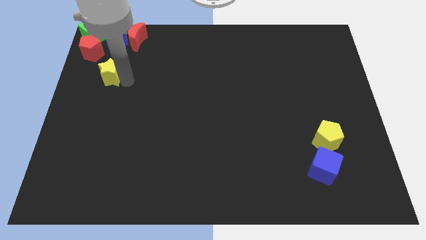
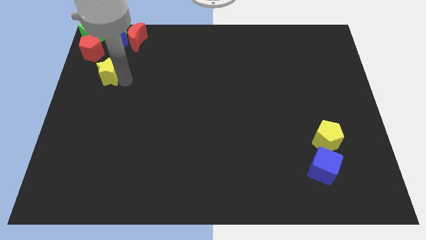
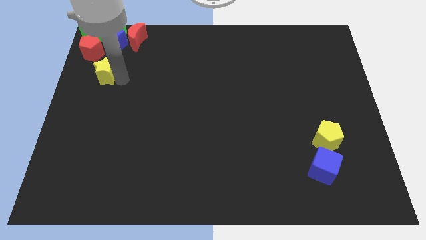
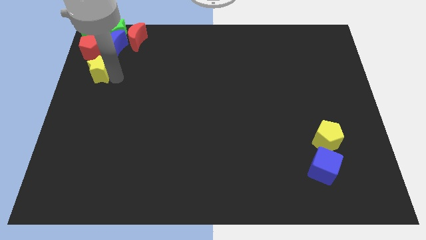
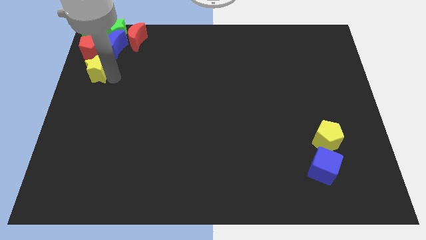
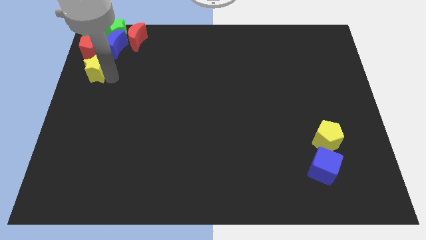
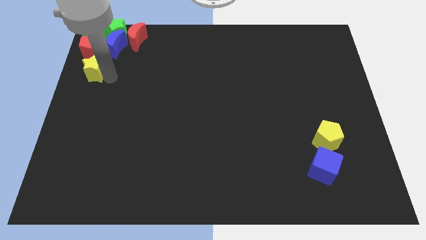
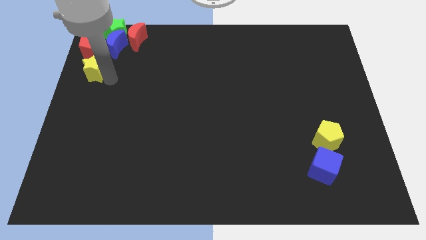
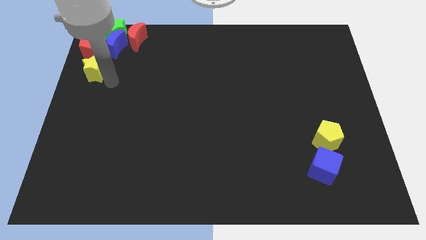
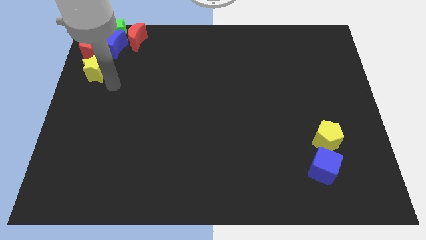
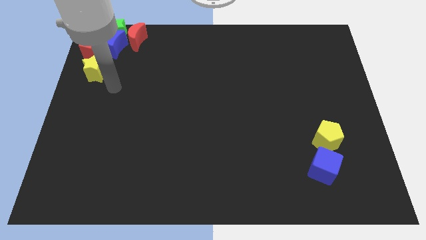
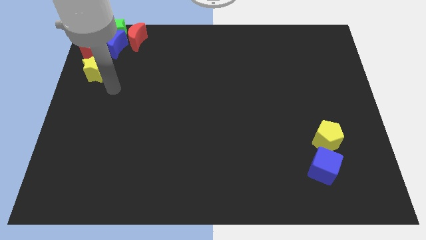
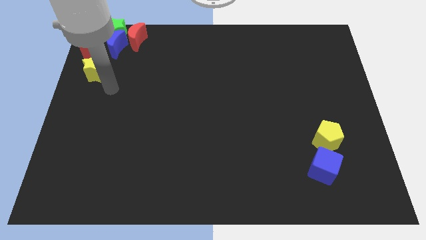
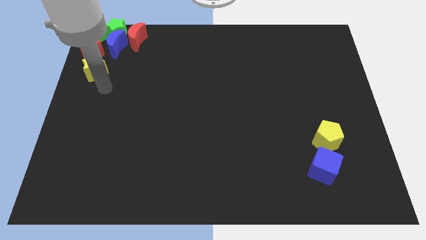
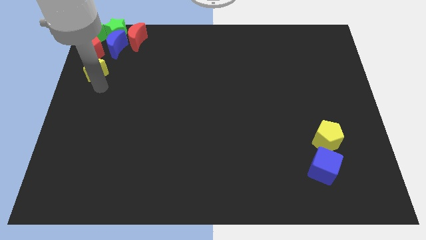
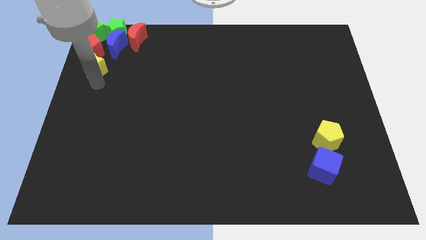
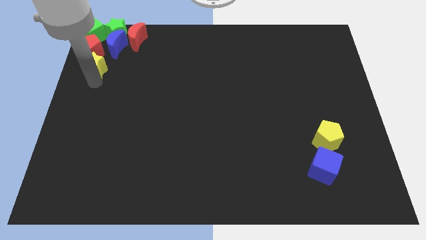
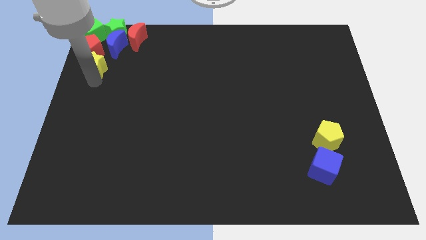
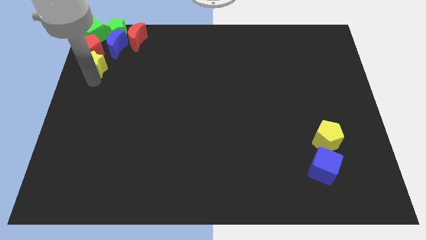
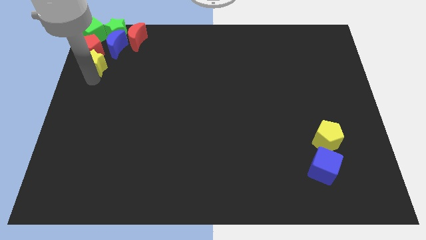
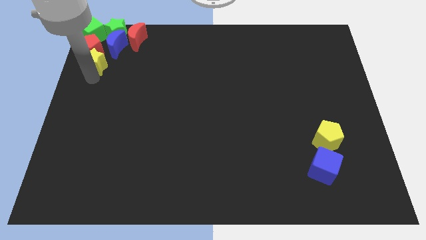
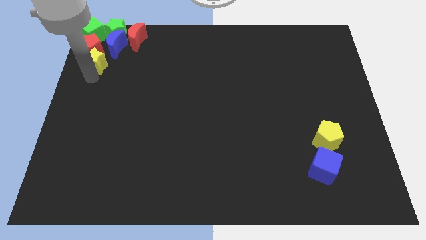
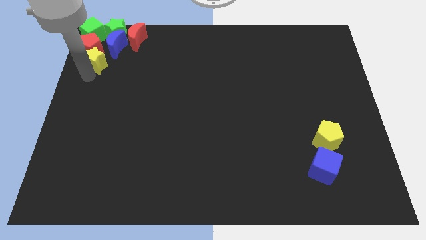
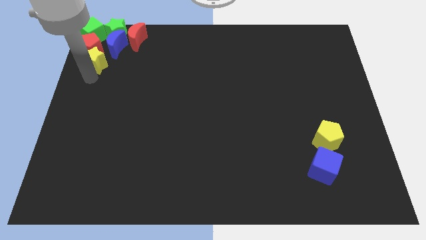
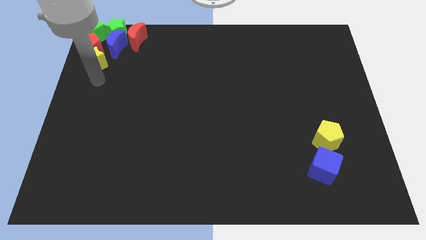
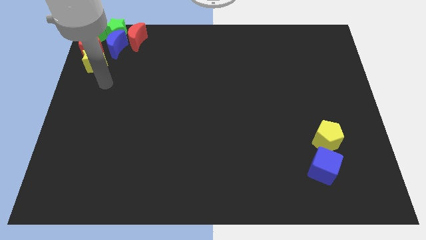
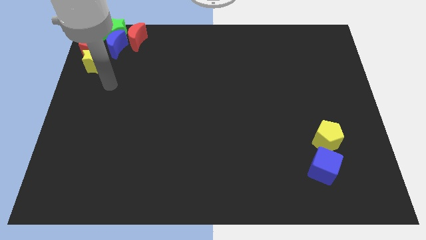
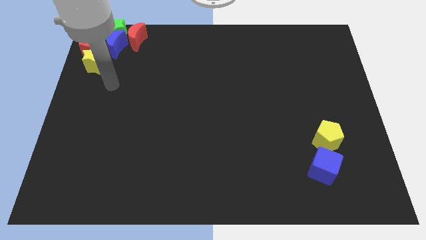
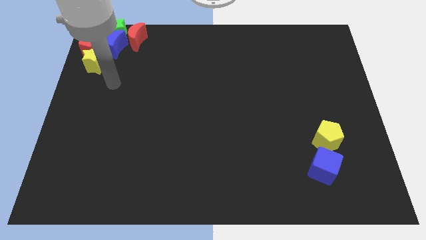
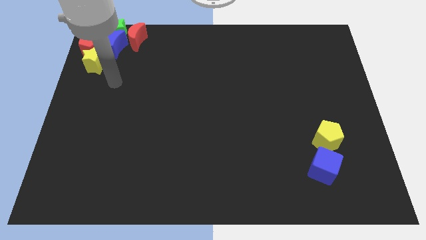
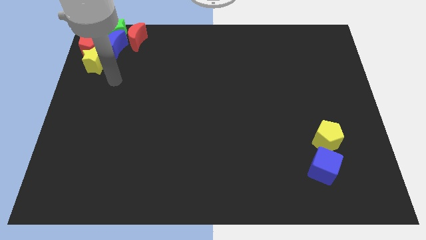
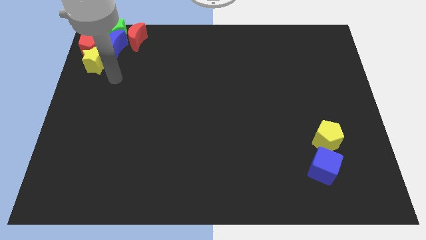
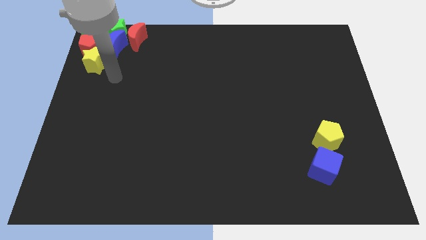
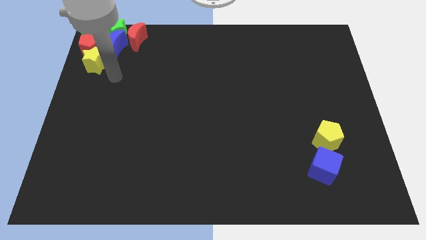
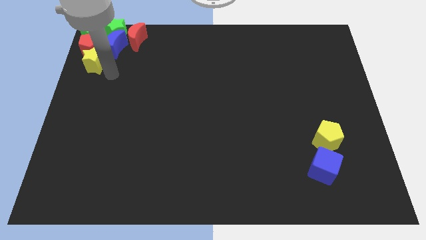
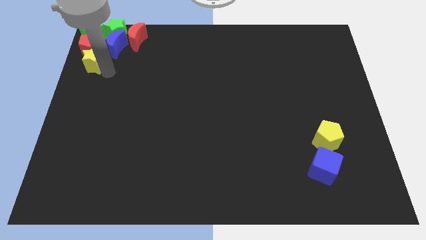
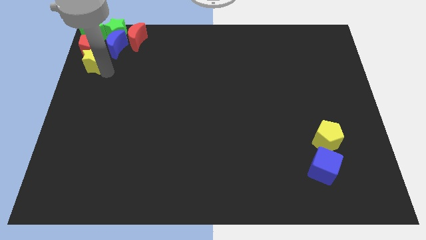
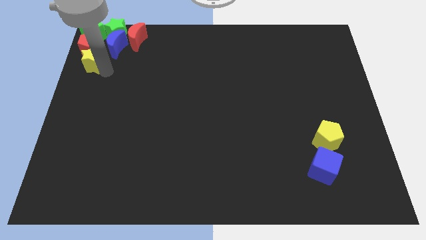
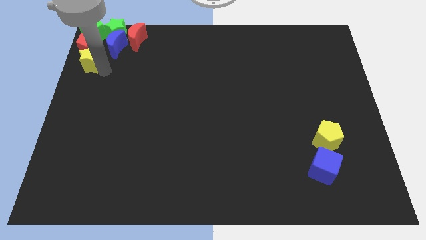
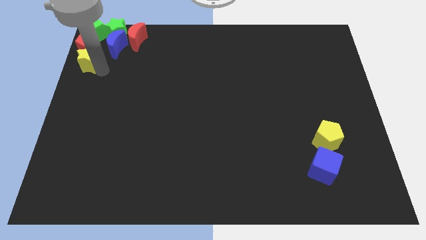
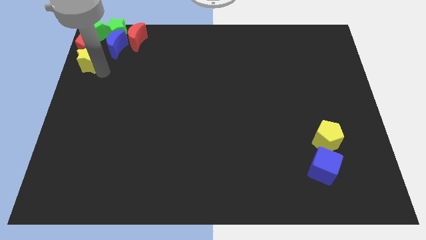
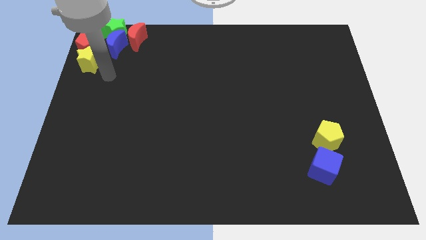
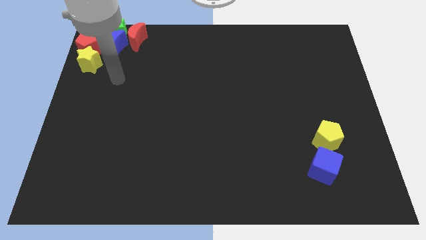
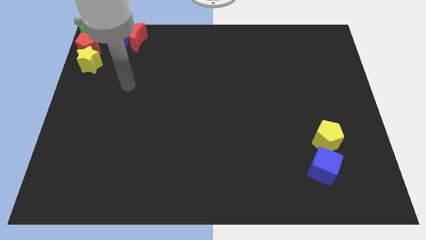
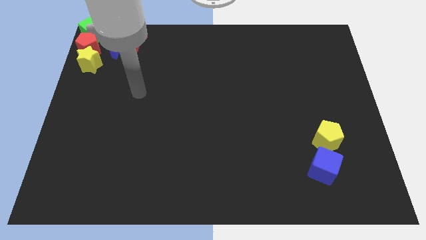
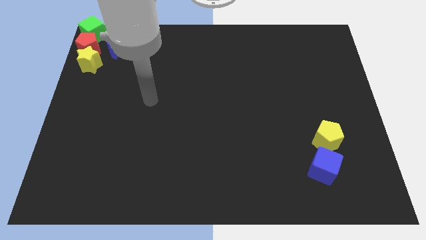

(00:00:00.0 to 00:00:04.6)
push the yellow star into the red pentagon

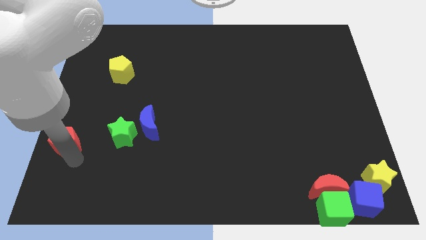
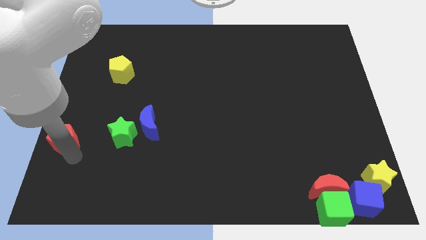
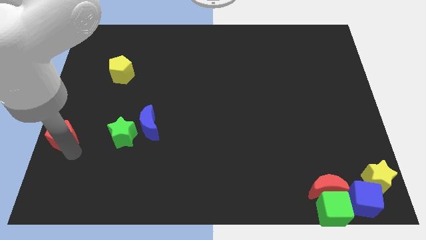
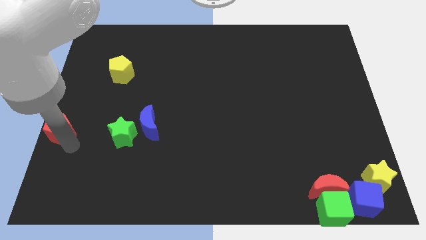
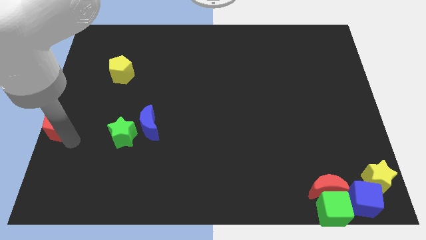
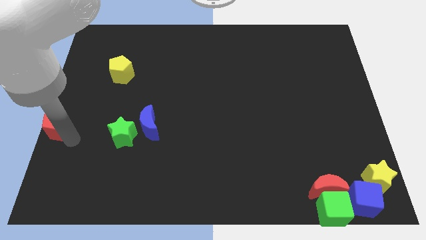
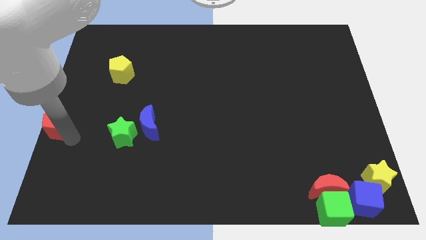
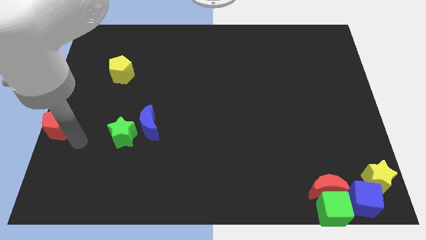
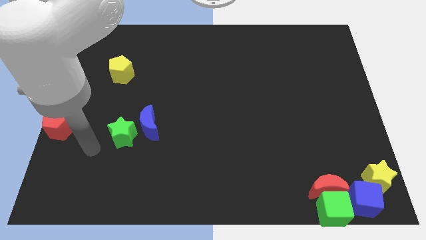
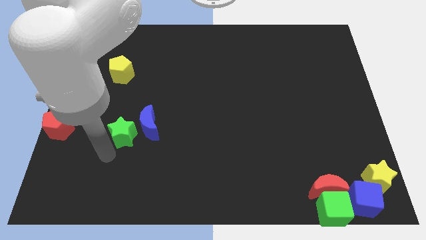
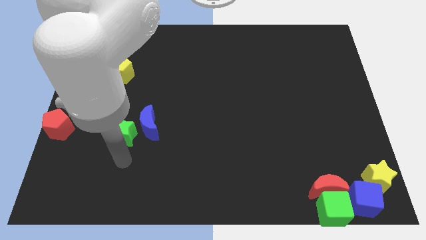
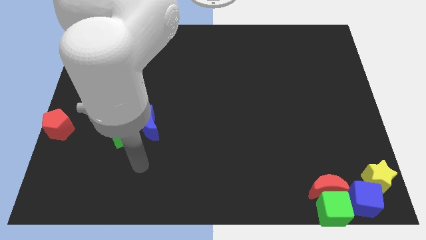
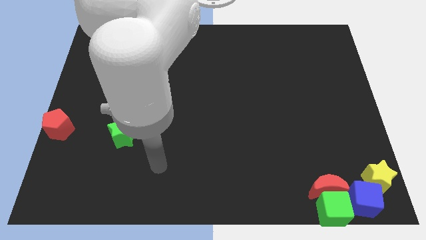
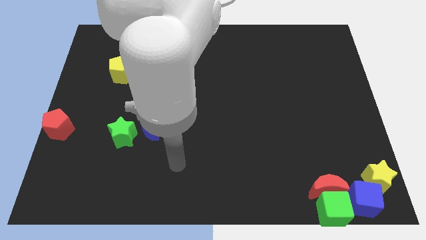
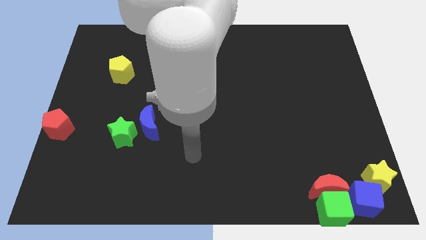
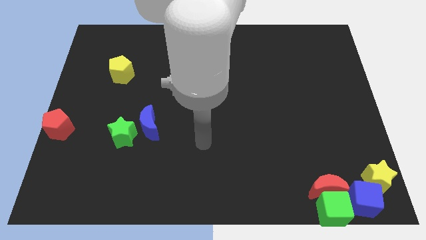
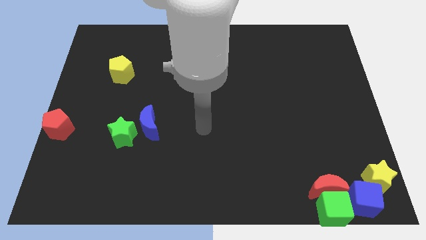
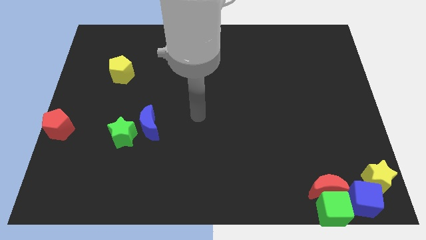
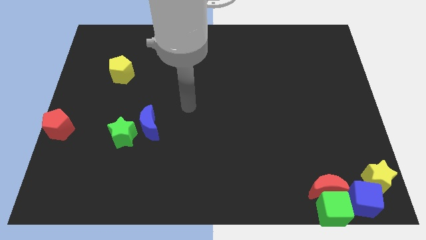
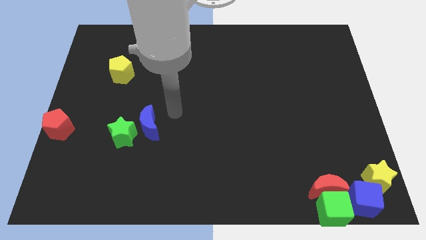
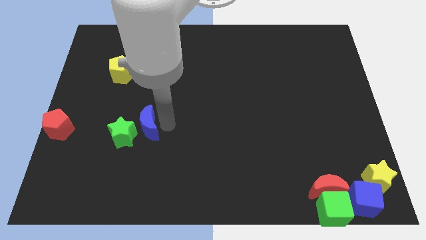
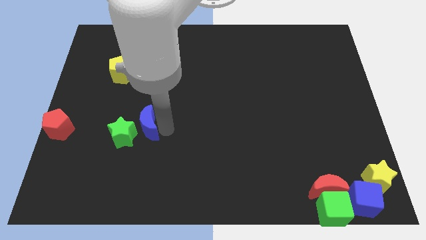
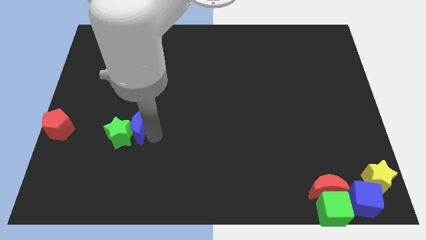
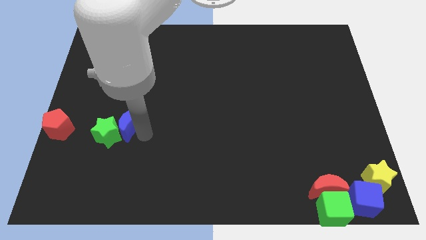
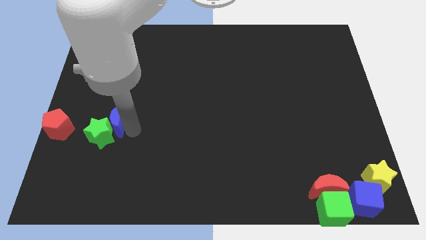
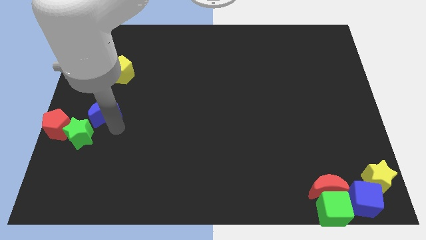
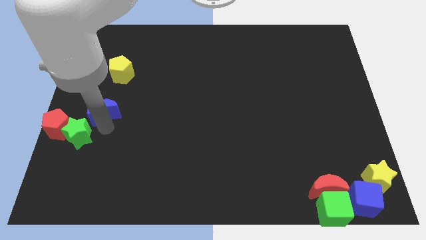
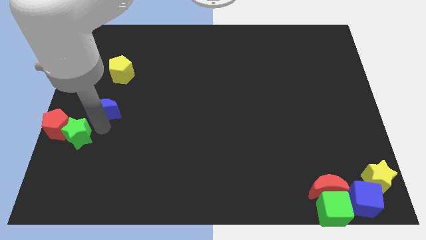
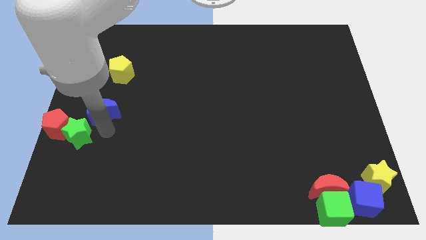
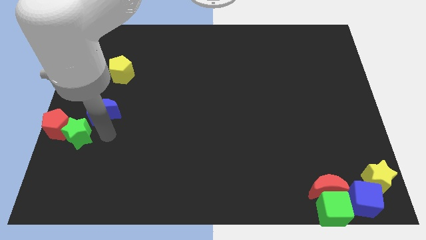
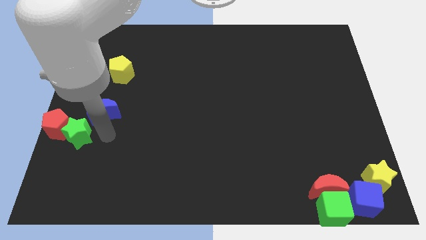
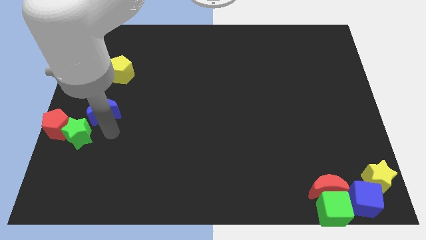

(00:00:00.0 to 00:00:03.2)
push green star close to the red pentagon

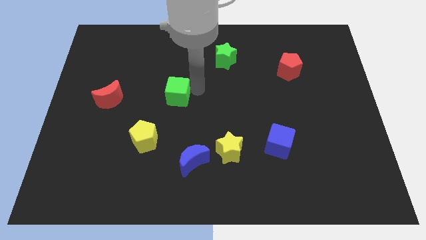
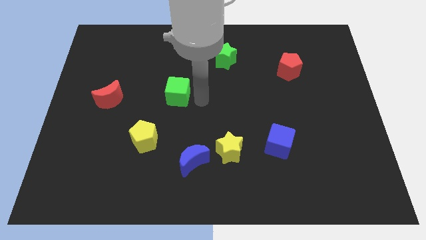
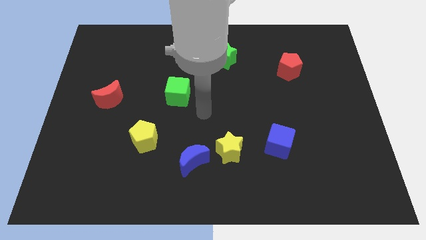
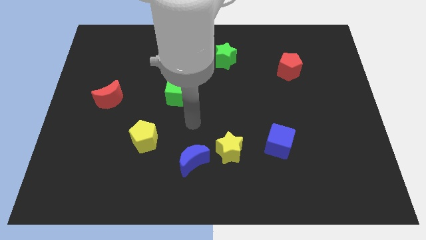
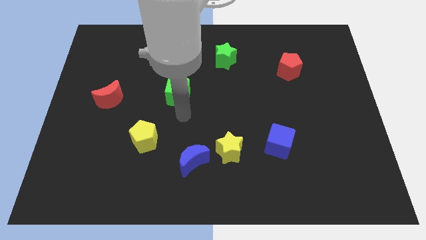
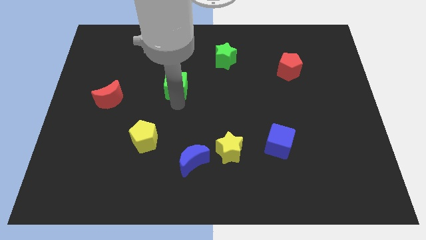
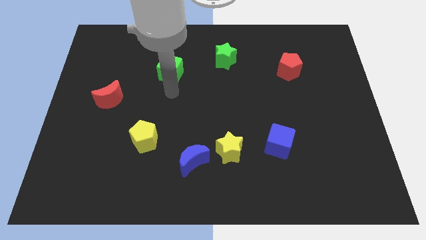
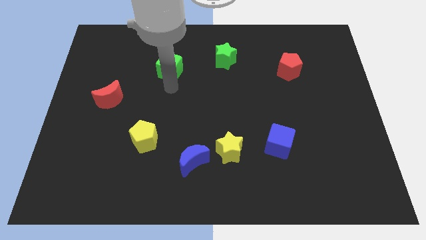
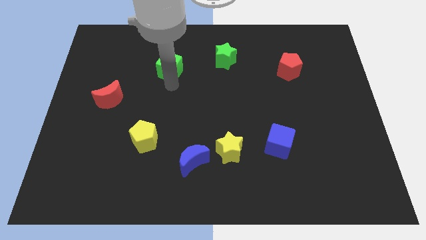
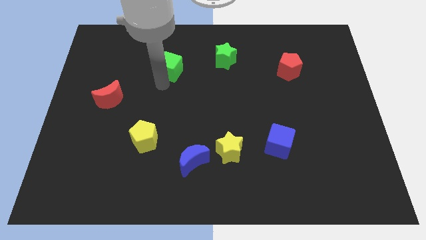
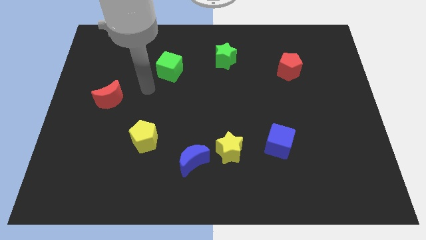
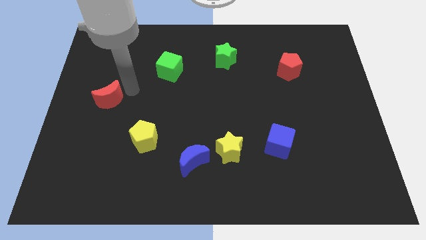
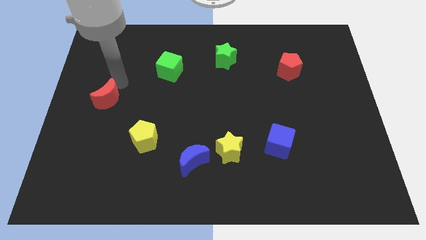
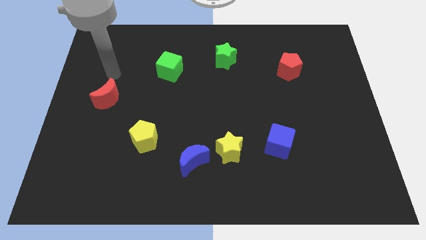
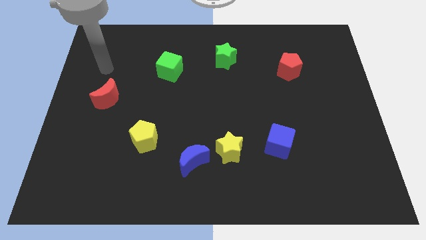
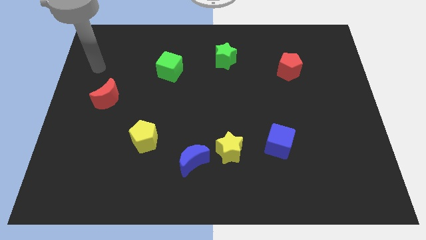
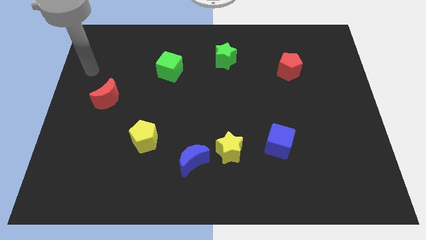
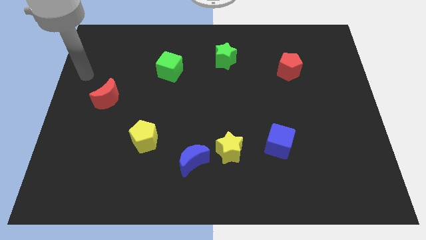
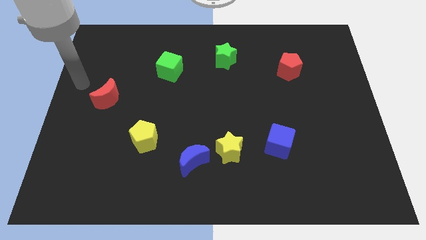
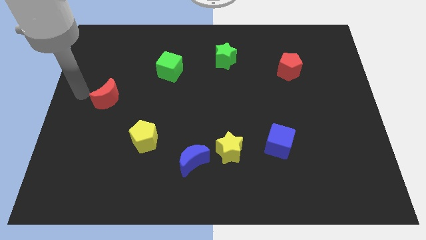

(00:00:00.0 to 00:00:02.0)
push the green cube to the left of the green star
